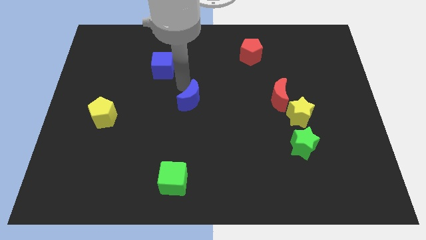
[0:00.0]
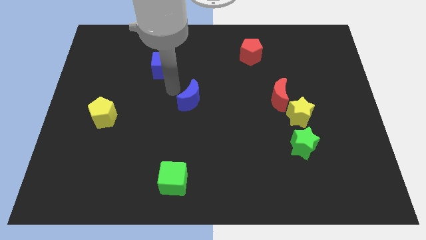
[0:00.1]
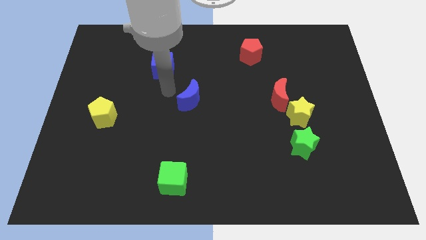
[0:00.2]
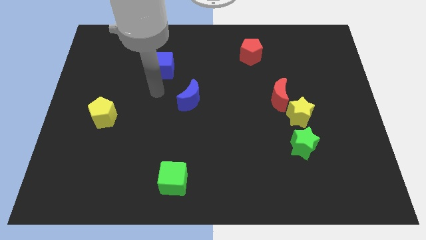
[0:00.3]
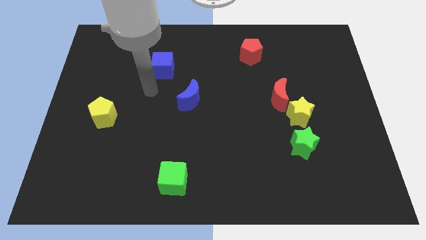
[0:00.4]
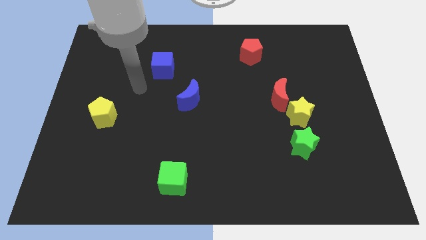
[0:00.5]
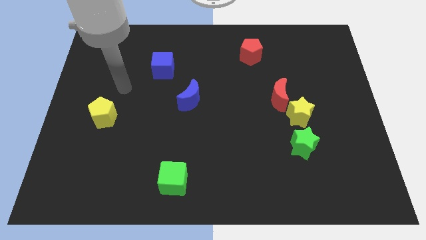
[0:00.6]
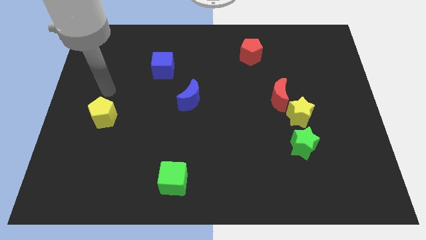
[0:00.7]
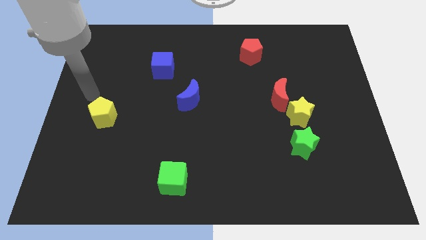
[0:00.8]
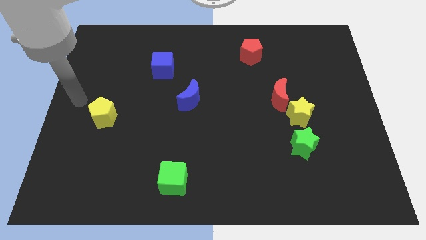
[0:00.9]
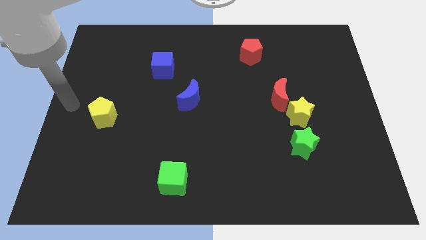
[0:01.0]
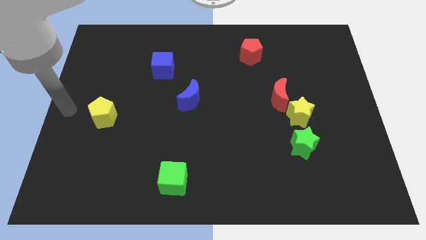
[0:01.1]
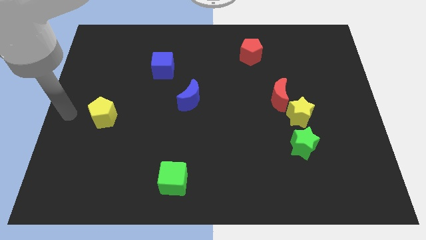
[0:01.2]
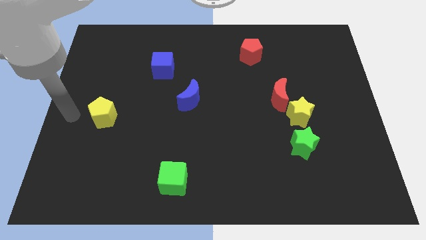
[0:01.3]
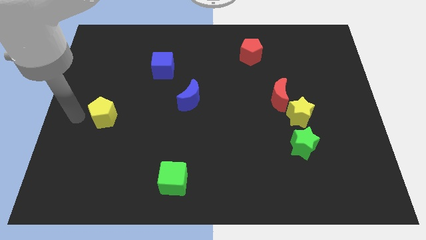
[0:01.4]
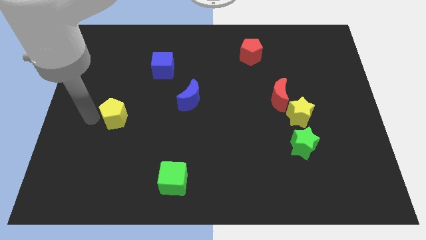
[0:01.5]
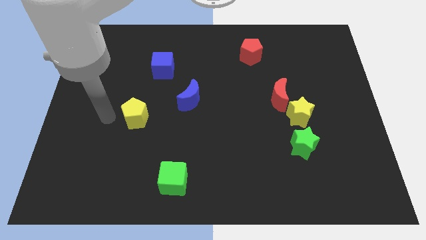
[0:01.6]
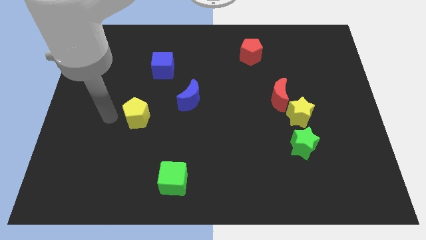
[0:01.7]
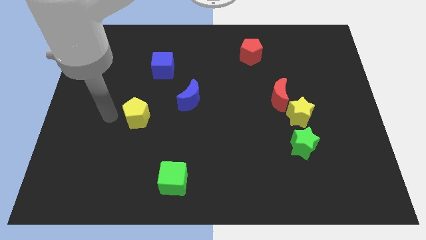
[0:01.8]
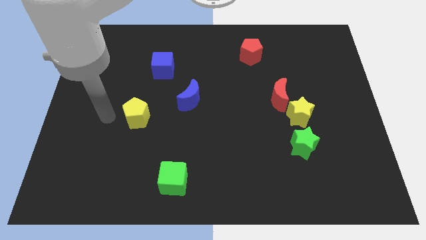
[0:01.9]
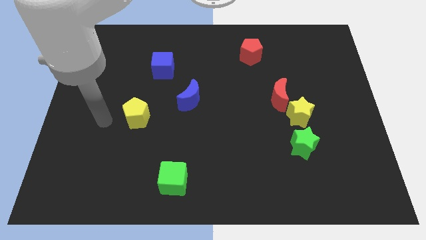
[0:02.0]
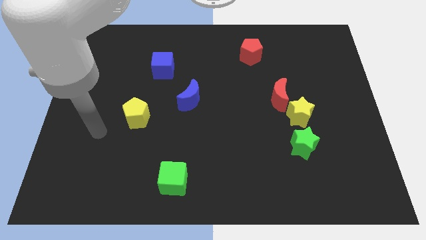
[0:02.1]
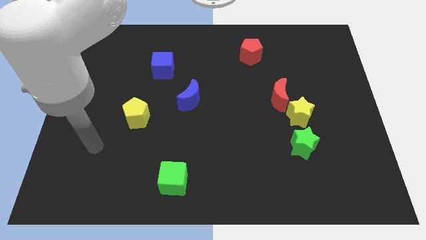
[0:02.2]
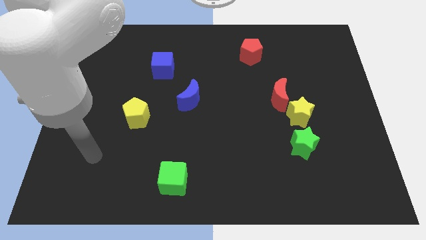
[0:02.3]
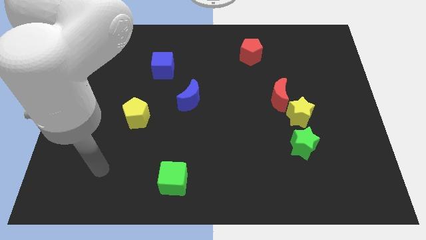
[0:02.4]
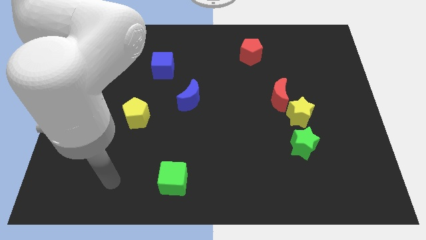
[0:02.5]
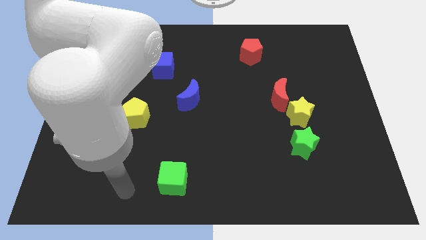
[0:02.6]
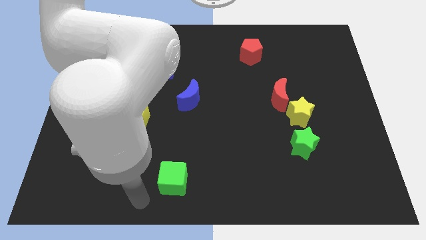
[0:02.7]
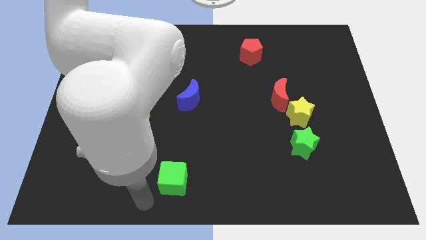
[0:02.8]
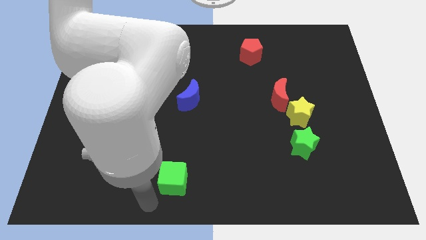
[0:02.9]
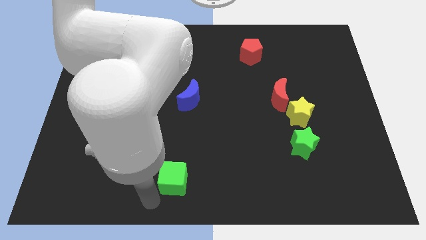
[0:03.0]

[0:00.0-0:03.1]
push the yellow pentagon towards the right

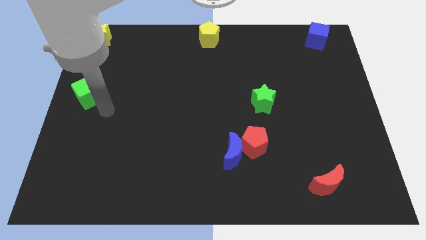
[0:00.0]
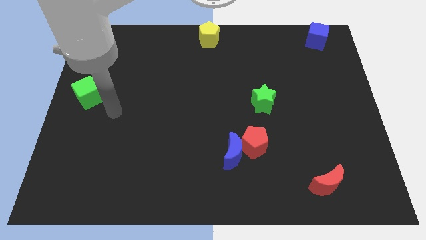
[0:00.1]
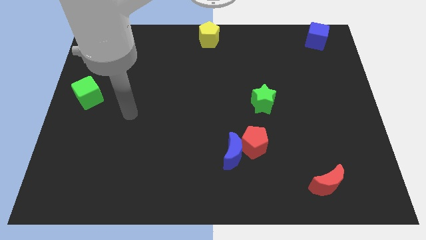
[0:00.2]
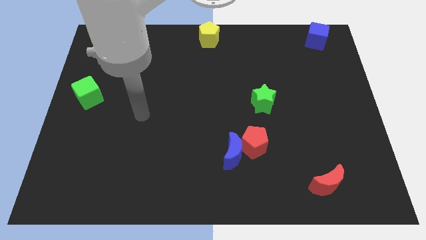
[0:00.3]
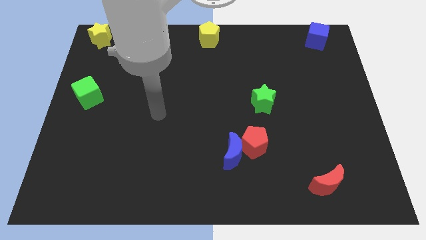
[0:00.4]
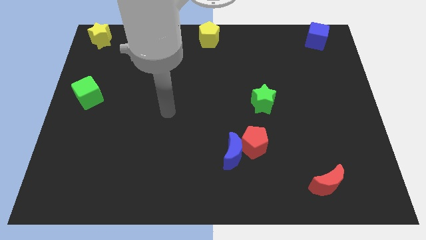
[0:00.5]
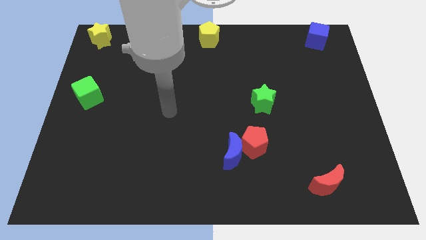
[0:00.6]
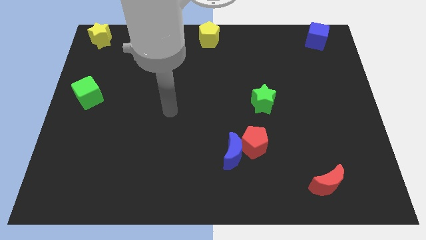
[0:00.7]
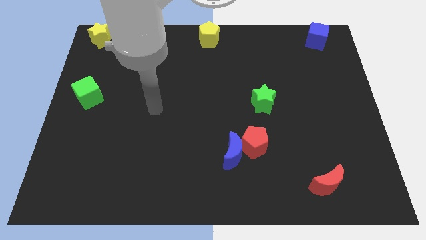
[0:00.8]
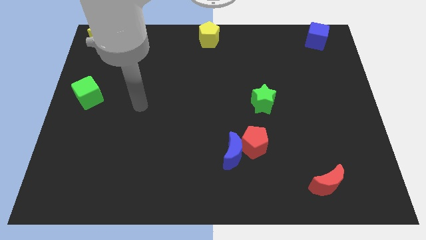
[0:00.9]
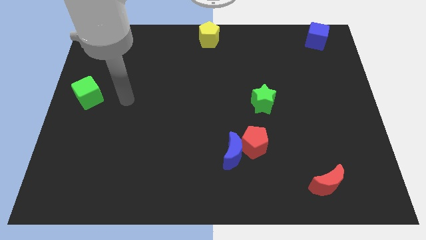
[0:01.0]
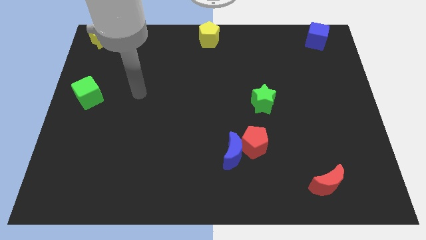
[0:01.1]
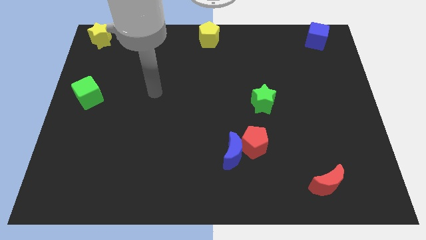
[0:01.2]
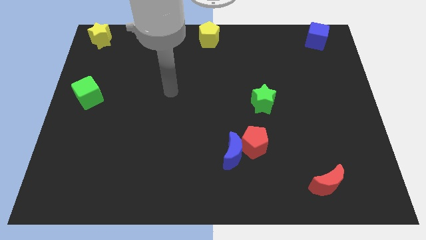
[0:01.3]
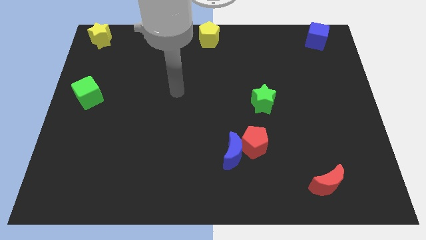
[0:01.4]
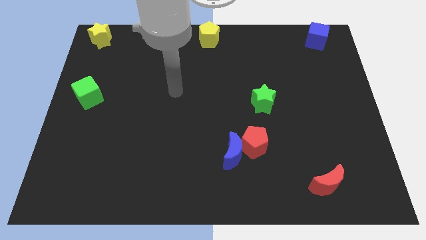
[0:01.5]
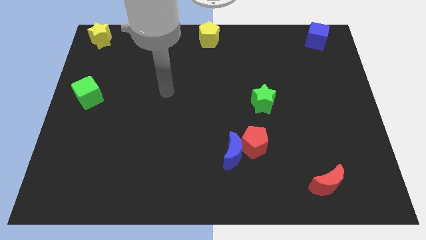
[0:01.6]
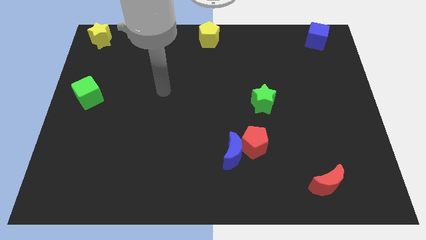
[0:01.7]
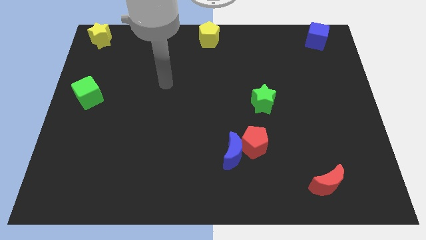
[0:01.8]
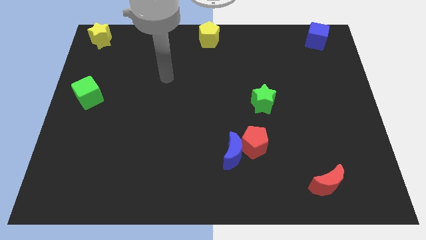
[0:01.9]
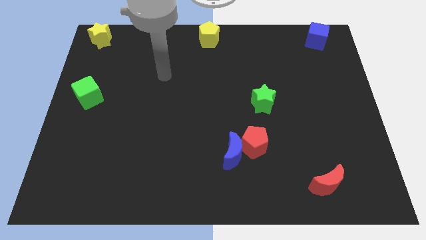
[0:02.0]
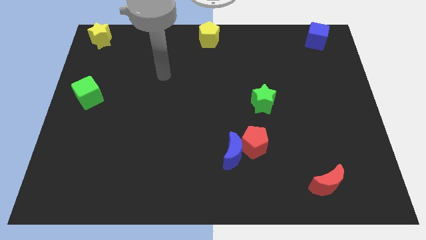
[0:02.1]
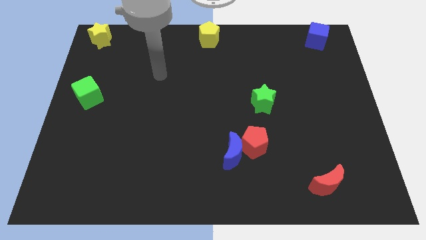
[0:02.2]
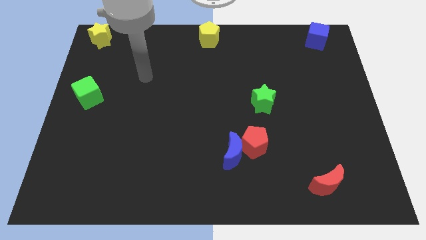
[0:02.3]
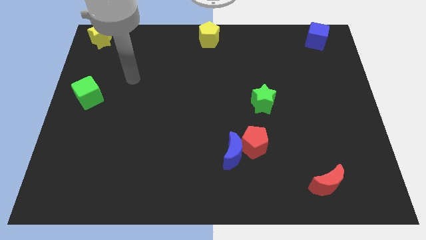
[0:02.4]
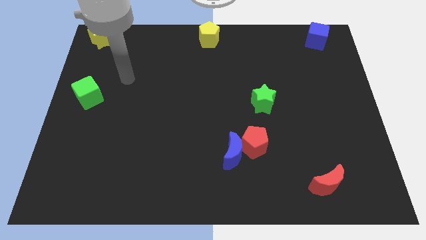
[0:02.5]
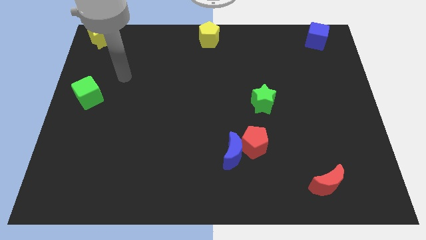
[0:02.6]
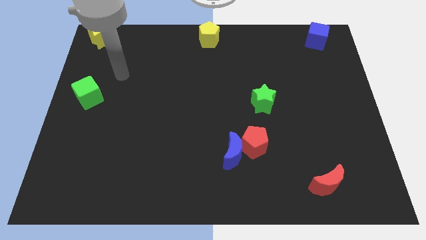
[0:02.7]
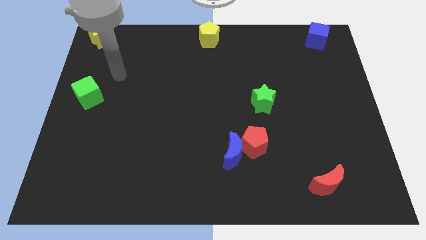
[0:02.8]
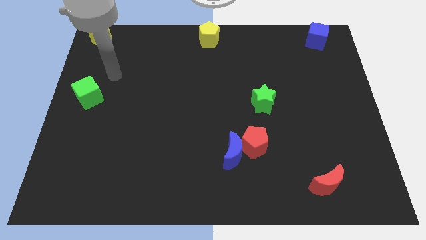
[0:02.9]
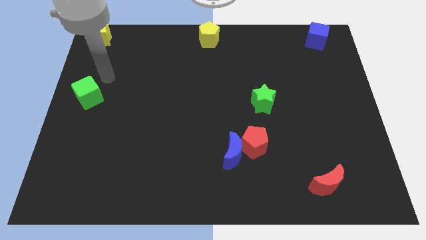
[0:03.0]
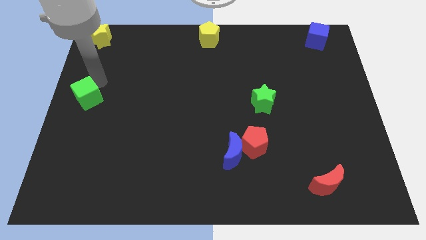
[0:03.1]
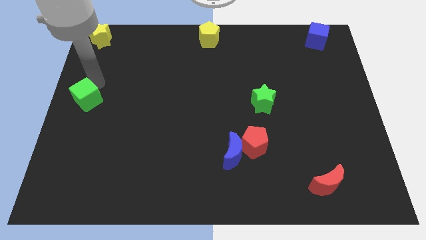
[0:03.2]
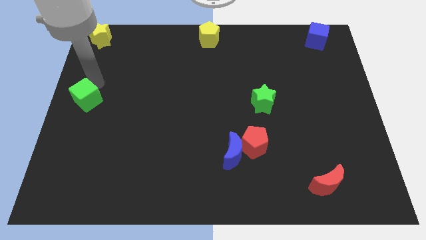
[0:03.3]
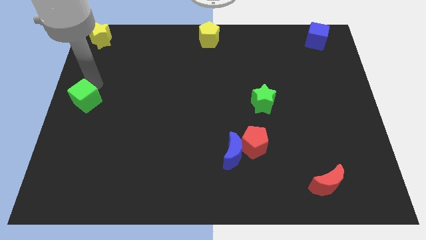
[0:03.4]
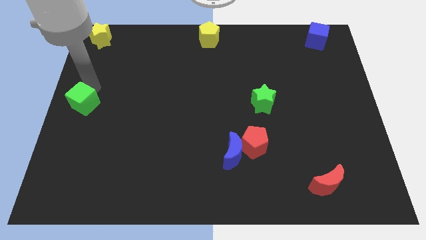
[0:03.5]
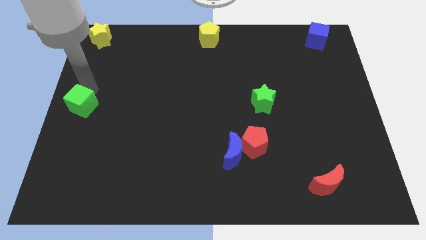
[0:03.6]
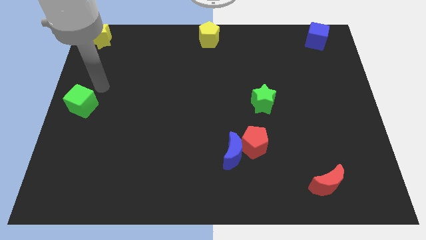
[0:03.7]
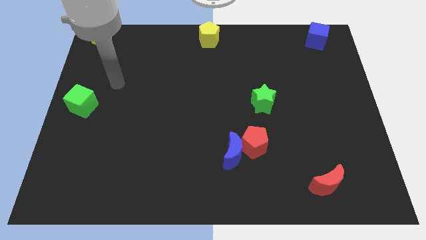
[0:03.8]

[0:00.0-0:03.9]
push the green cube slightly to the bottom

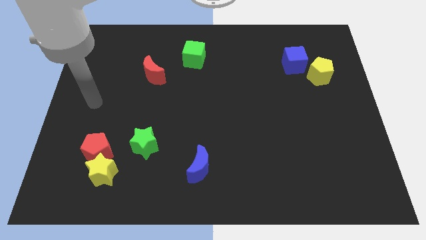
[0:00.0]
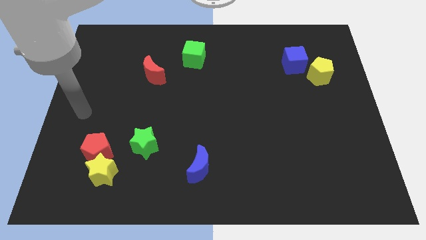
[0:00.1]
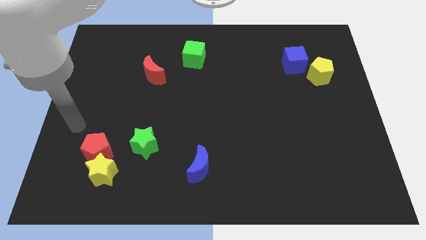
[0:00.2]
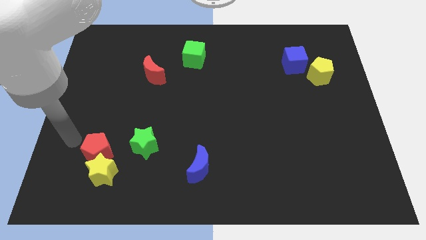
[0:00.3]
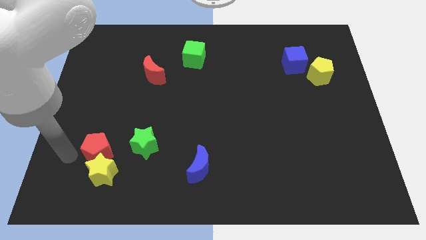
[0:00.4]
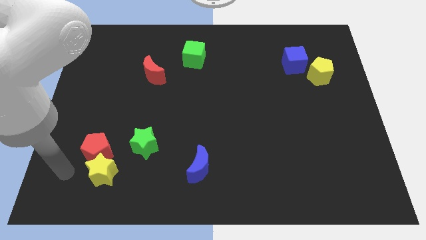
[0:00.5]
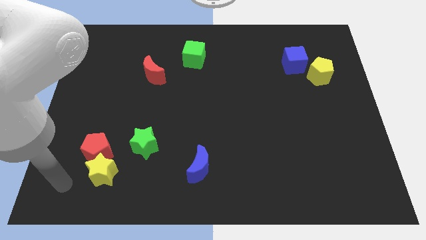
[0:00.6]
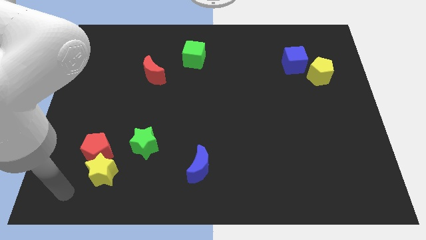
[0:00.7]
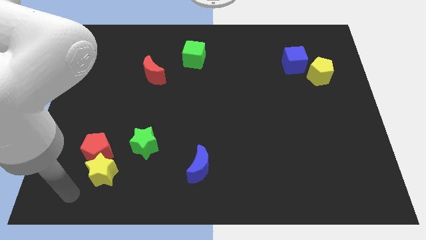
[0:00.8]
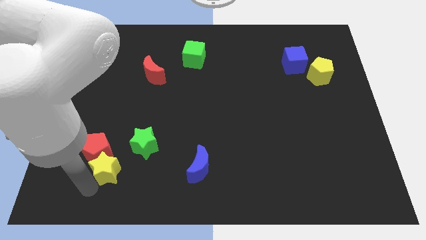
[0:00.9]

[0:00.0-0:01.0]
place the arm below the yellow star

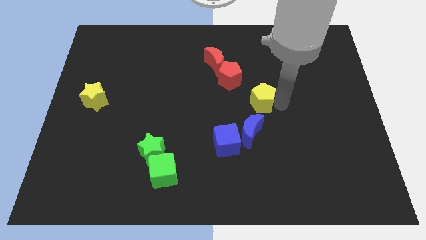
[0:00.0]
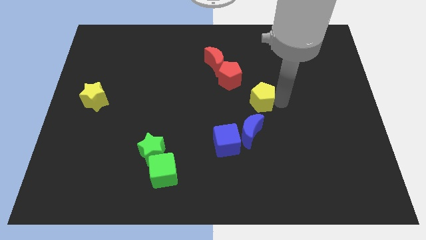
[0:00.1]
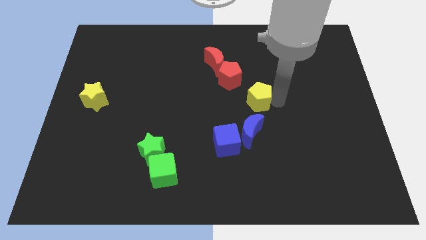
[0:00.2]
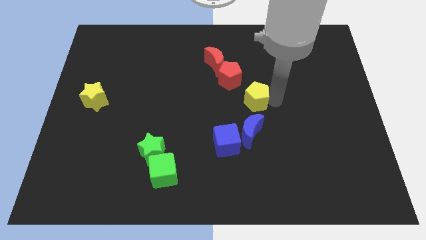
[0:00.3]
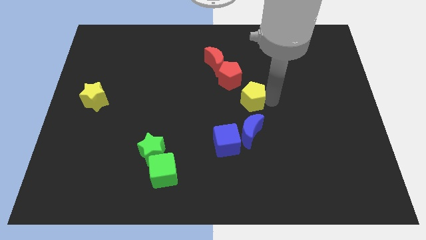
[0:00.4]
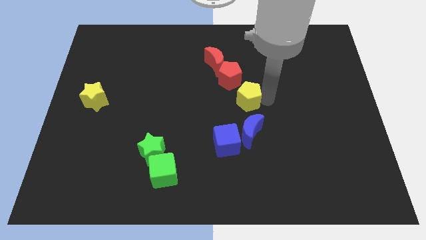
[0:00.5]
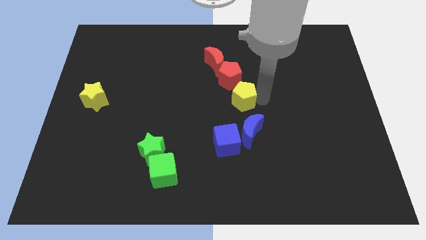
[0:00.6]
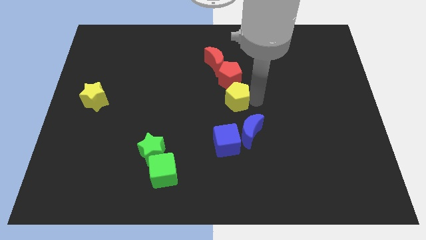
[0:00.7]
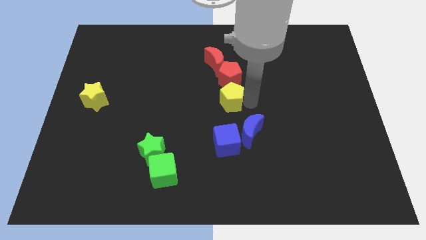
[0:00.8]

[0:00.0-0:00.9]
place the yellow pentagon below the red pentagon

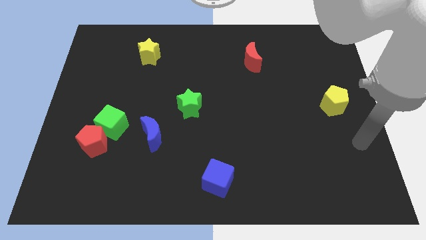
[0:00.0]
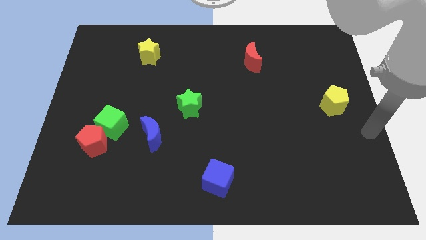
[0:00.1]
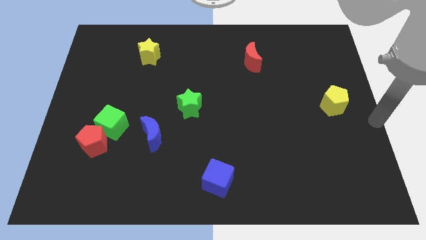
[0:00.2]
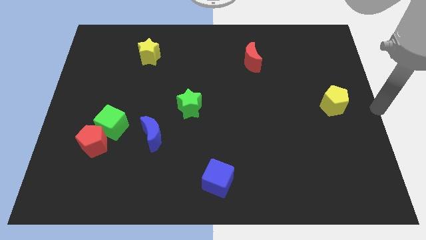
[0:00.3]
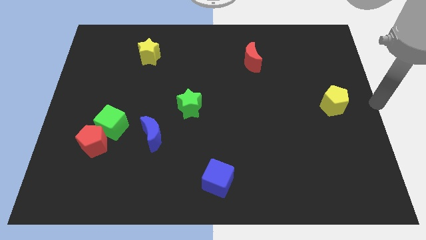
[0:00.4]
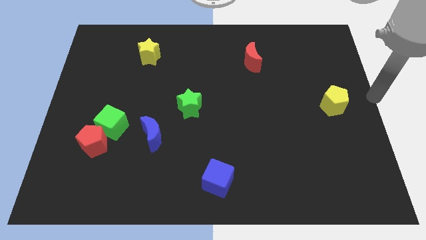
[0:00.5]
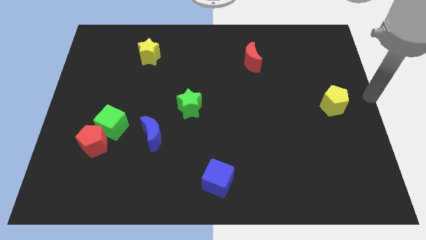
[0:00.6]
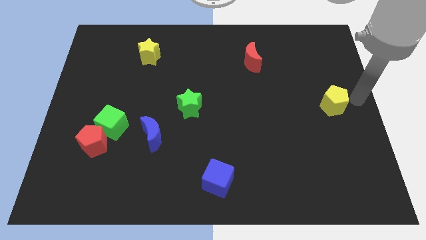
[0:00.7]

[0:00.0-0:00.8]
place your arm to the right side of yellow pentagon
